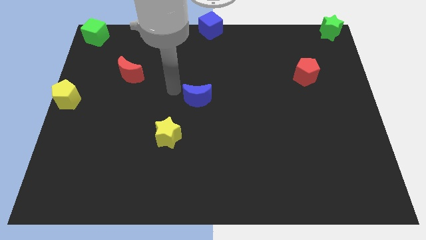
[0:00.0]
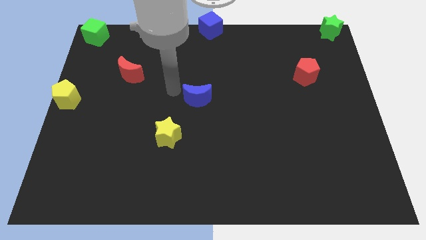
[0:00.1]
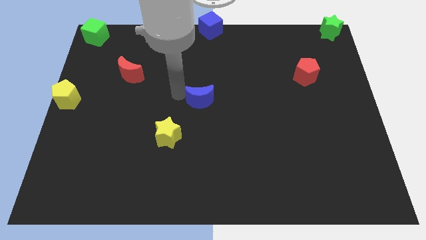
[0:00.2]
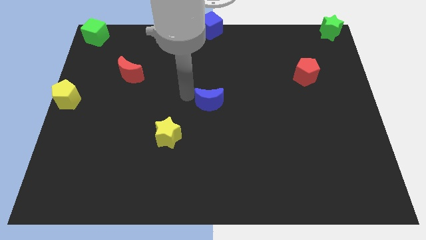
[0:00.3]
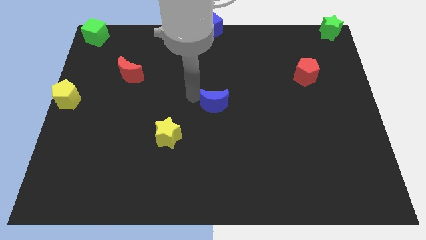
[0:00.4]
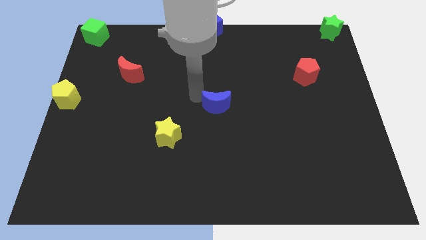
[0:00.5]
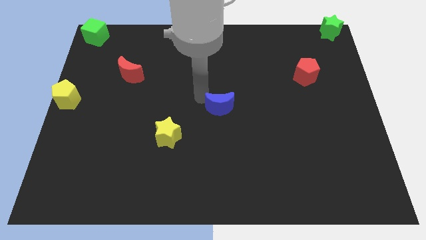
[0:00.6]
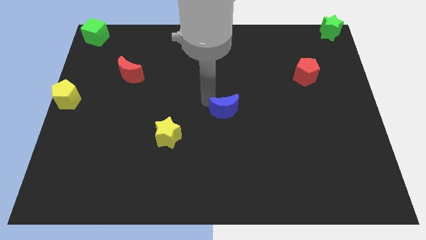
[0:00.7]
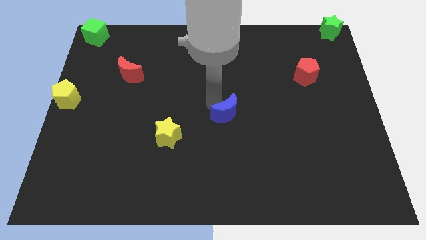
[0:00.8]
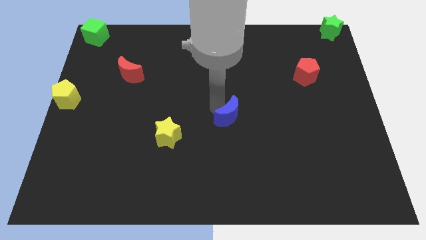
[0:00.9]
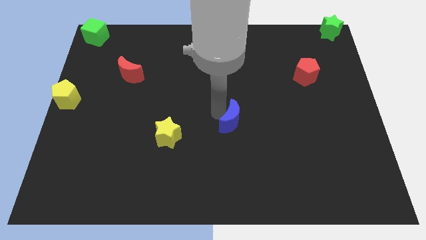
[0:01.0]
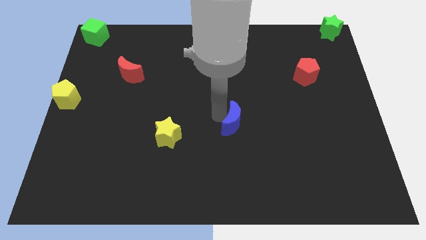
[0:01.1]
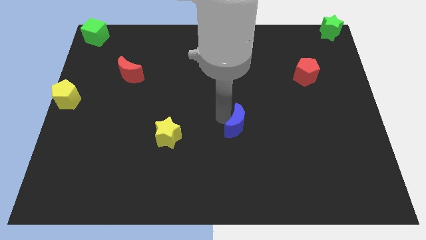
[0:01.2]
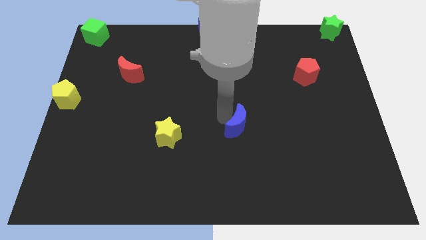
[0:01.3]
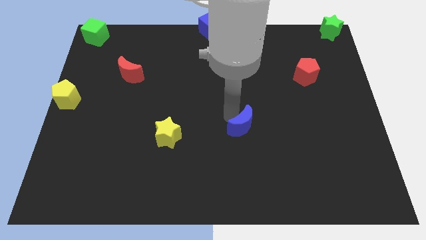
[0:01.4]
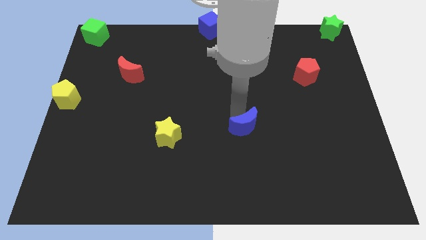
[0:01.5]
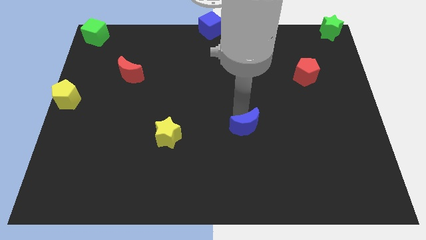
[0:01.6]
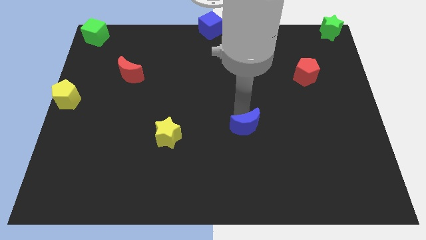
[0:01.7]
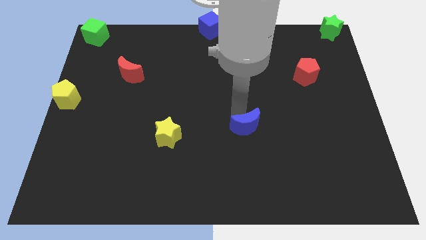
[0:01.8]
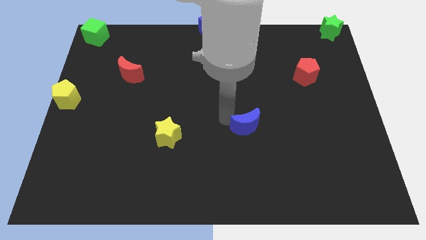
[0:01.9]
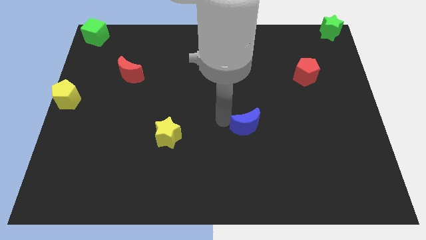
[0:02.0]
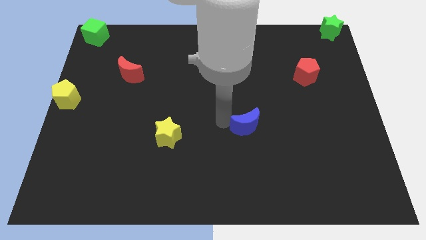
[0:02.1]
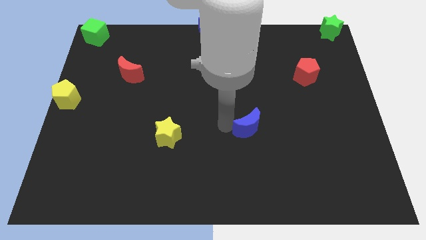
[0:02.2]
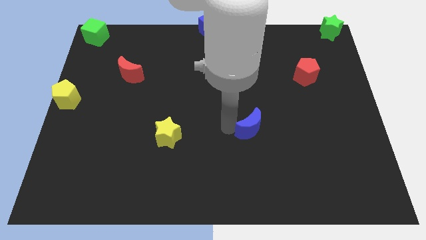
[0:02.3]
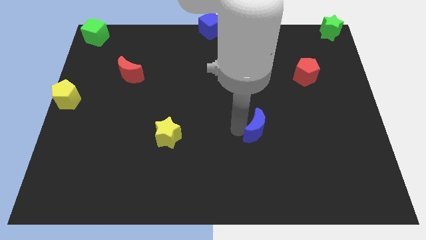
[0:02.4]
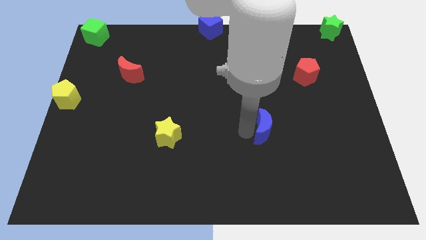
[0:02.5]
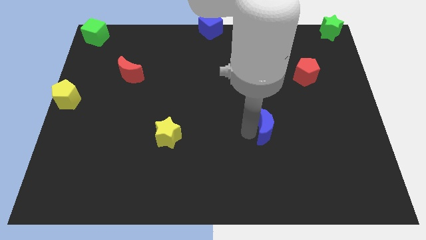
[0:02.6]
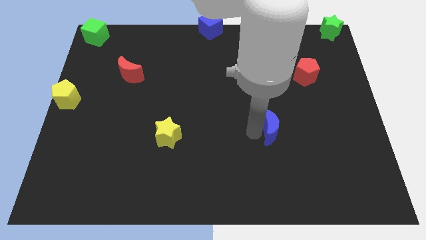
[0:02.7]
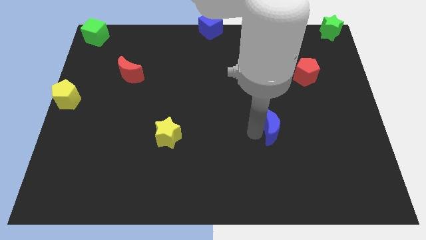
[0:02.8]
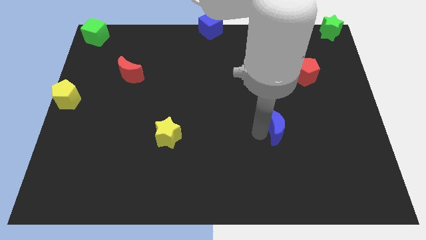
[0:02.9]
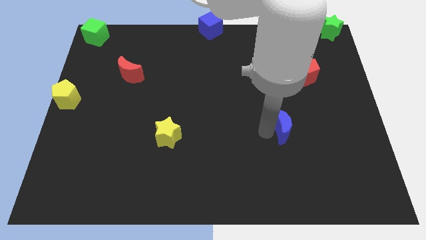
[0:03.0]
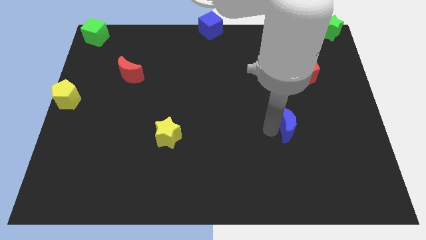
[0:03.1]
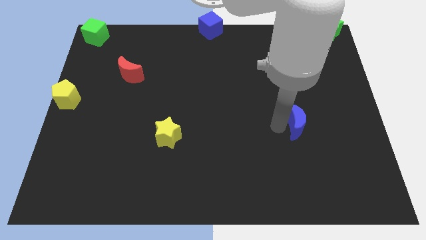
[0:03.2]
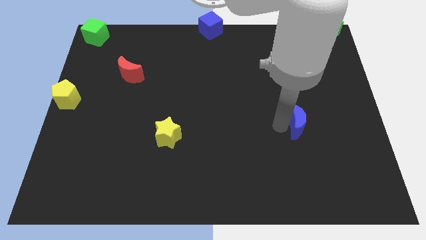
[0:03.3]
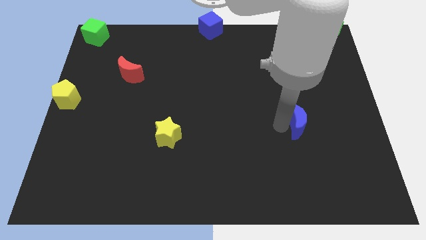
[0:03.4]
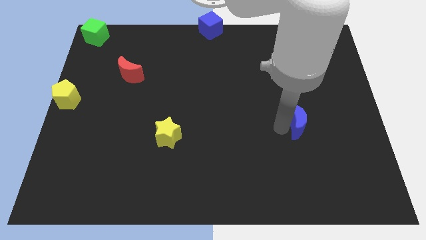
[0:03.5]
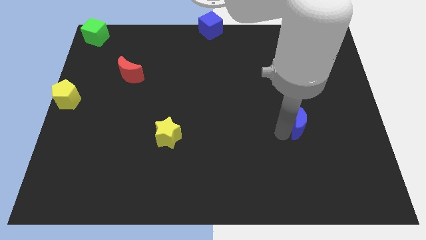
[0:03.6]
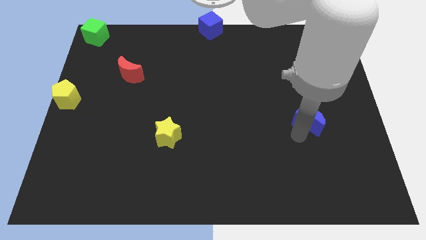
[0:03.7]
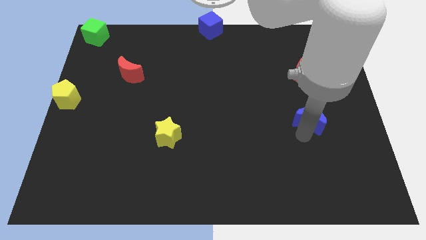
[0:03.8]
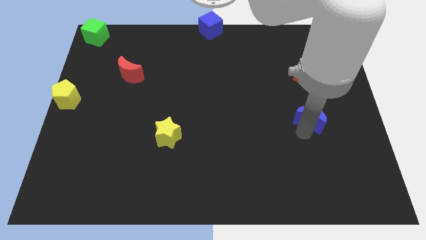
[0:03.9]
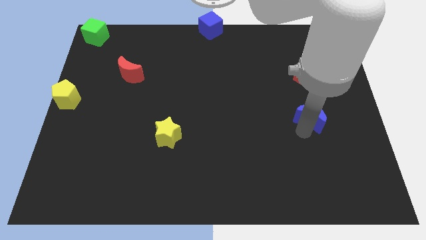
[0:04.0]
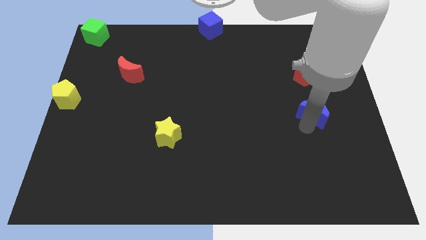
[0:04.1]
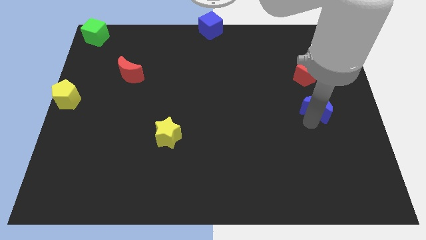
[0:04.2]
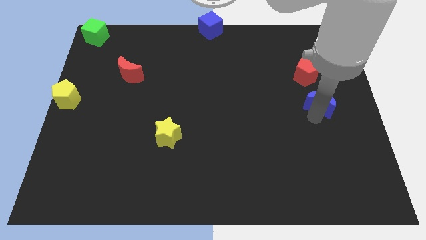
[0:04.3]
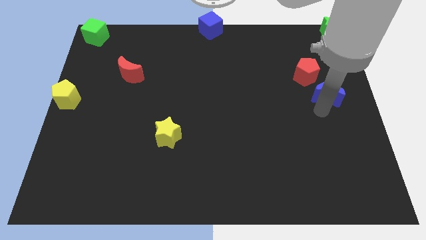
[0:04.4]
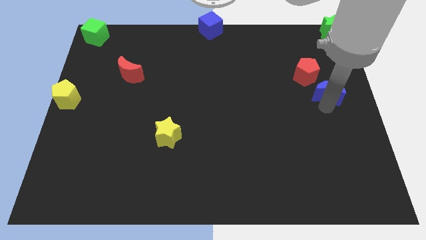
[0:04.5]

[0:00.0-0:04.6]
move blue moon right below the red pentagon

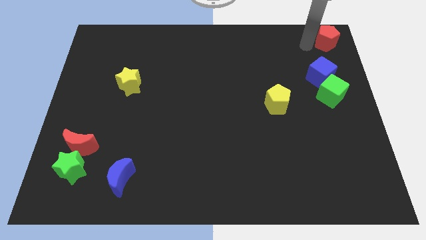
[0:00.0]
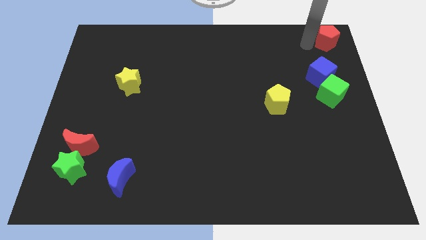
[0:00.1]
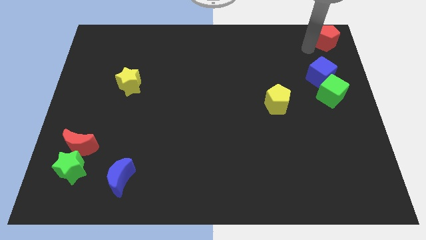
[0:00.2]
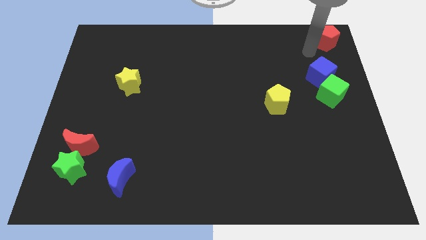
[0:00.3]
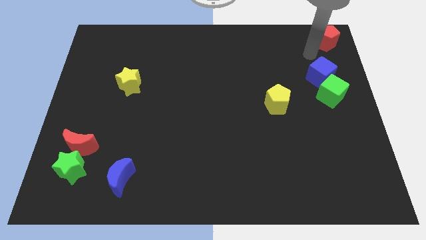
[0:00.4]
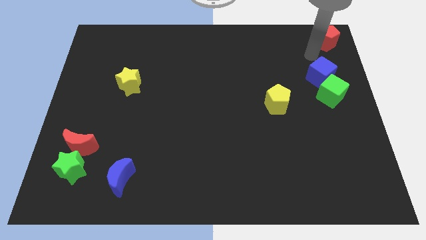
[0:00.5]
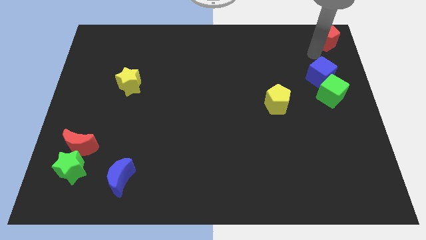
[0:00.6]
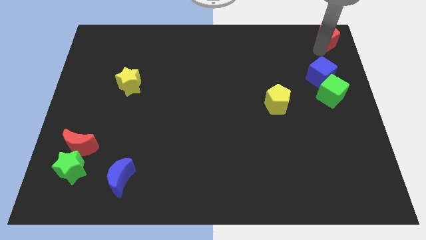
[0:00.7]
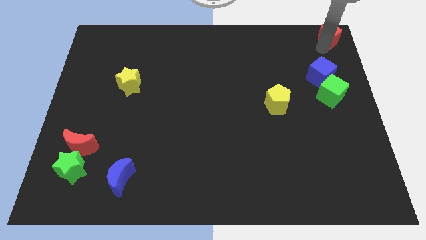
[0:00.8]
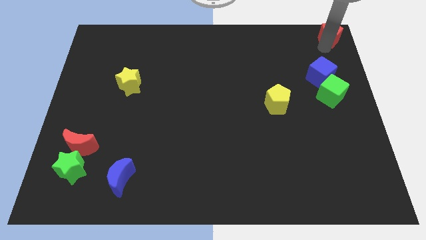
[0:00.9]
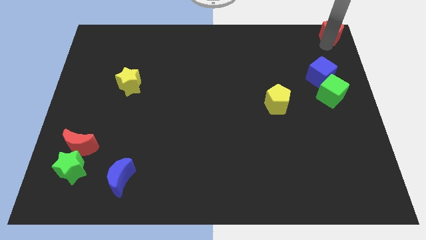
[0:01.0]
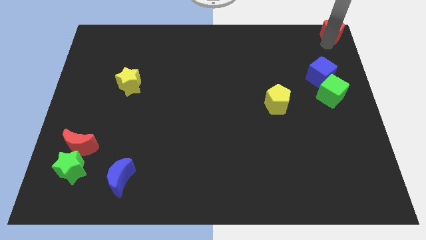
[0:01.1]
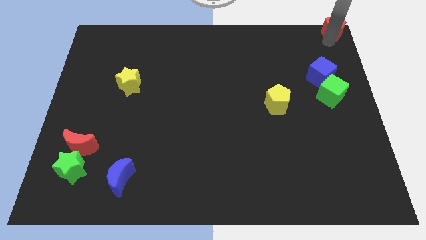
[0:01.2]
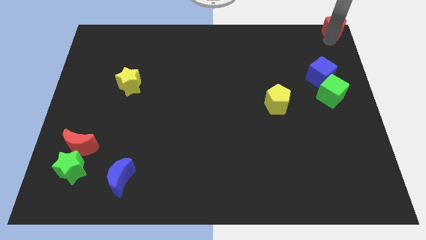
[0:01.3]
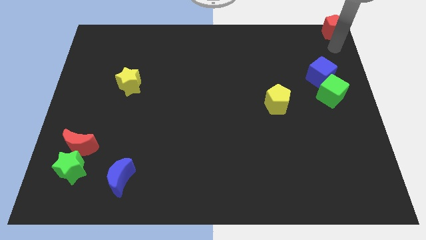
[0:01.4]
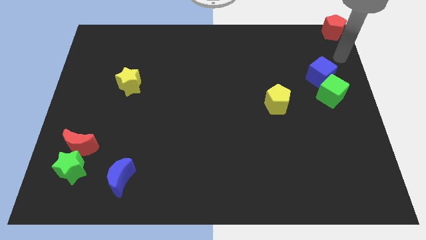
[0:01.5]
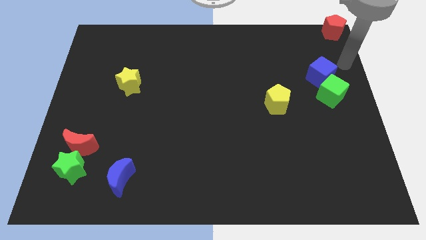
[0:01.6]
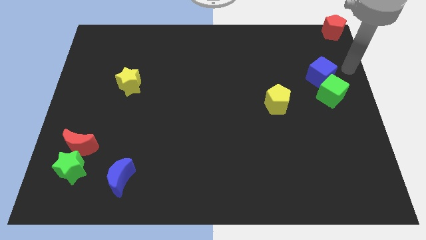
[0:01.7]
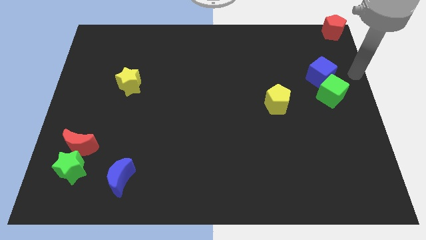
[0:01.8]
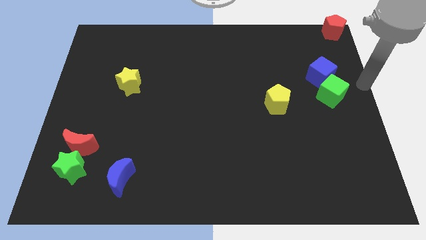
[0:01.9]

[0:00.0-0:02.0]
place the red pentagon to the top right corner of the board

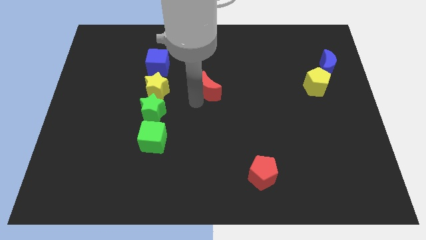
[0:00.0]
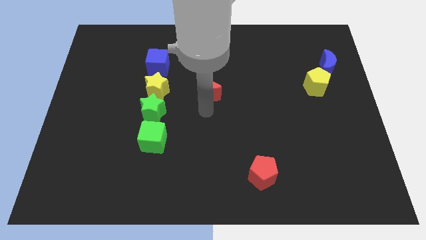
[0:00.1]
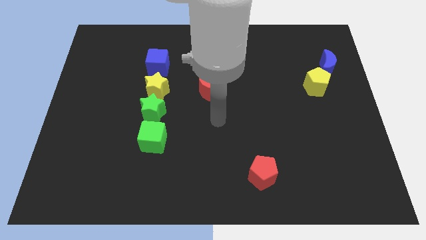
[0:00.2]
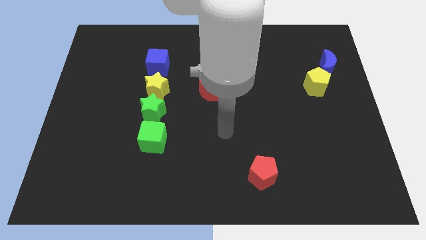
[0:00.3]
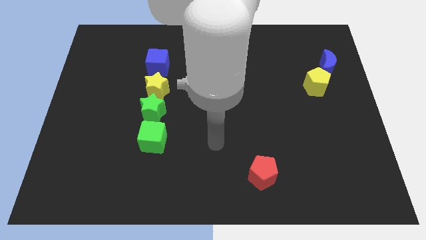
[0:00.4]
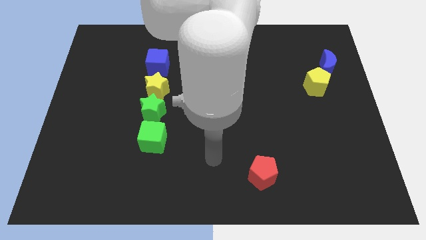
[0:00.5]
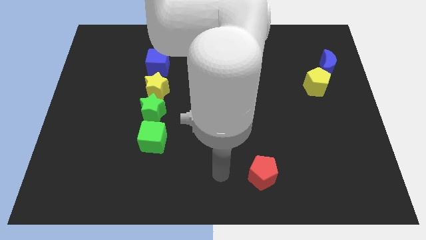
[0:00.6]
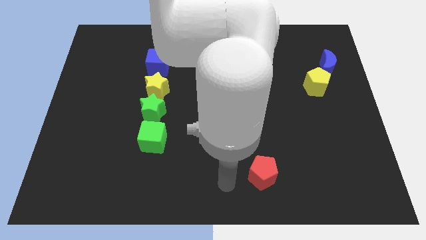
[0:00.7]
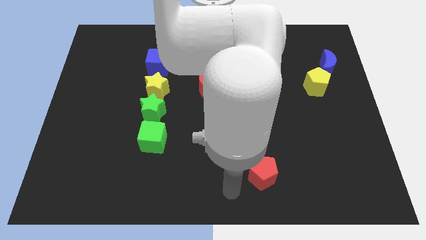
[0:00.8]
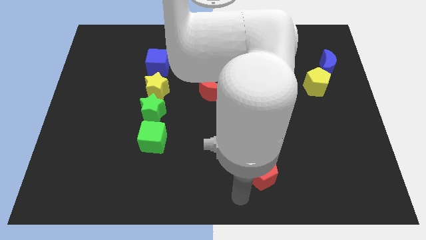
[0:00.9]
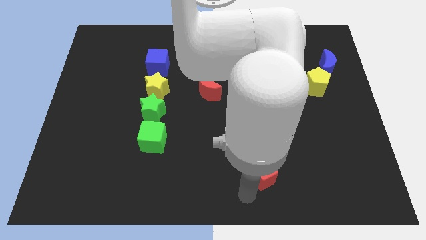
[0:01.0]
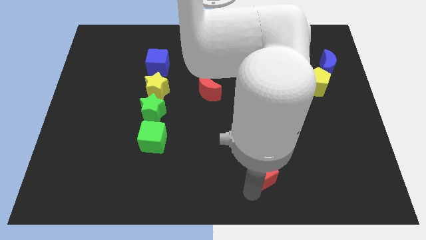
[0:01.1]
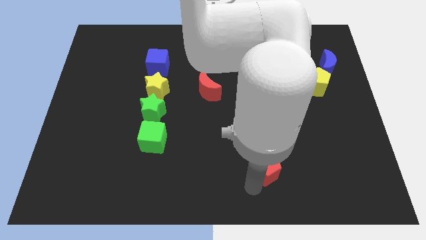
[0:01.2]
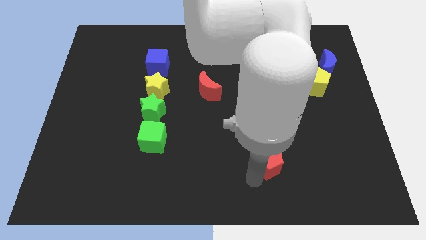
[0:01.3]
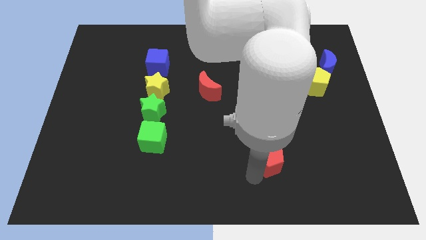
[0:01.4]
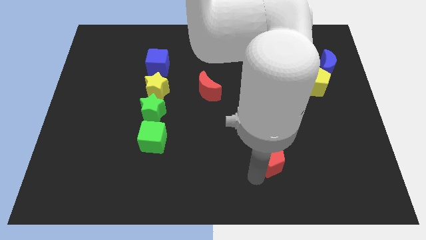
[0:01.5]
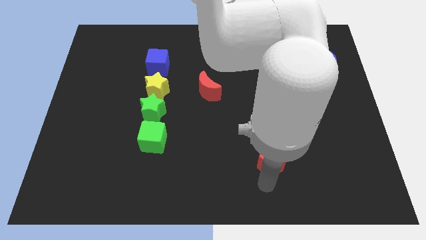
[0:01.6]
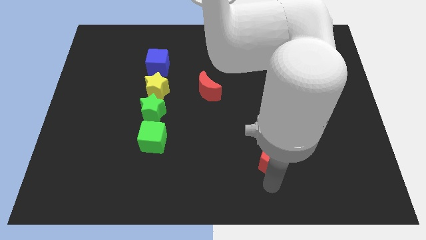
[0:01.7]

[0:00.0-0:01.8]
move your arm towards the red pentagon

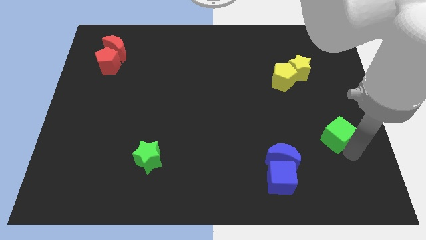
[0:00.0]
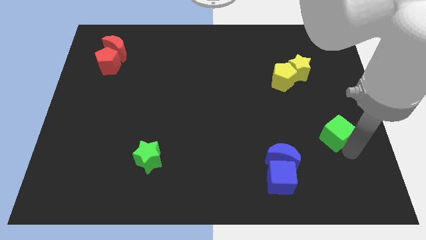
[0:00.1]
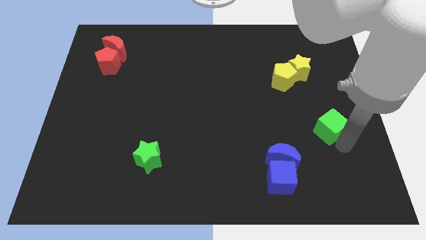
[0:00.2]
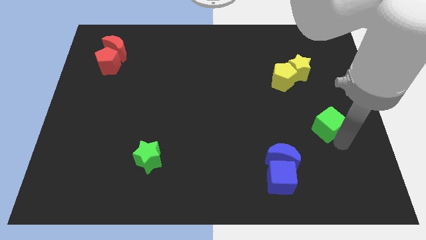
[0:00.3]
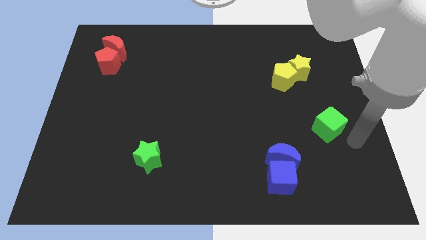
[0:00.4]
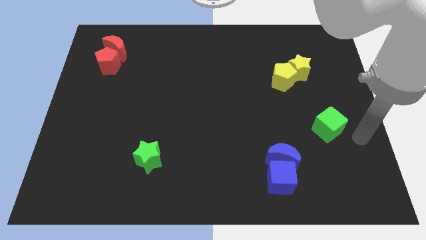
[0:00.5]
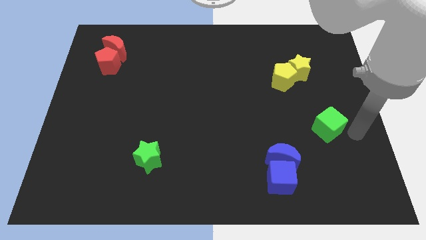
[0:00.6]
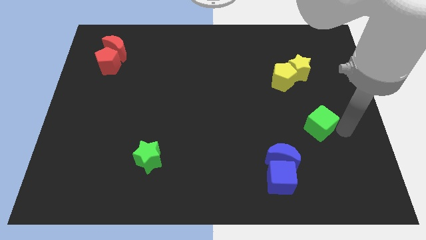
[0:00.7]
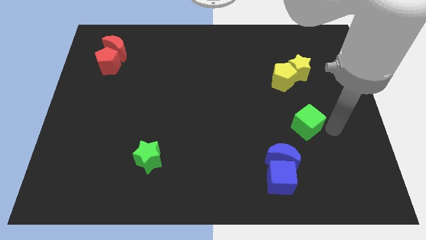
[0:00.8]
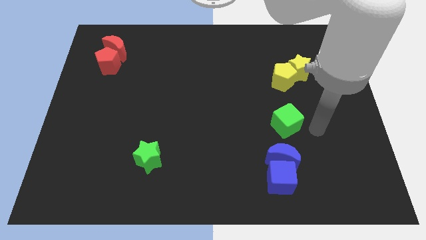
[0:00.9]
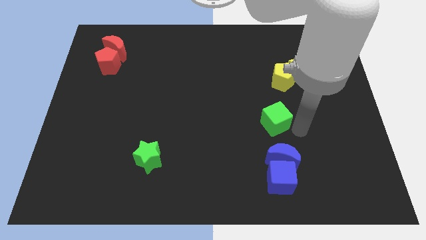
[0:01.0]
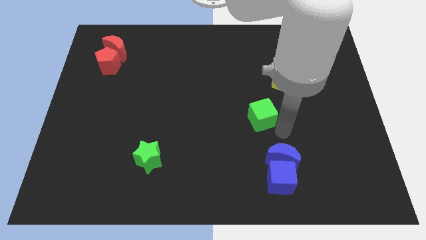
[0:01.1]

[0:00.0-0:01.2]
push the green cube towards the center of the board
